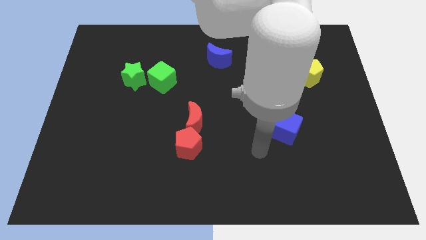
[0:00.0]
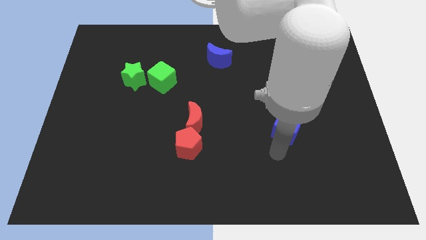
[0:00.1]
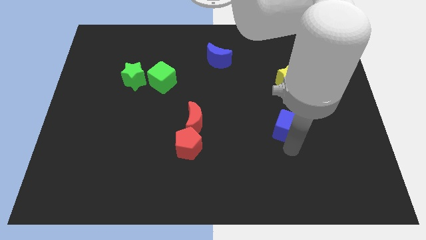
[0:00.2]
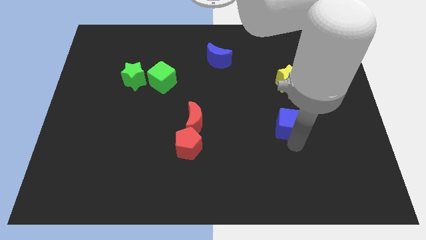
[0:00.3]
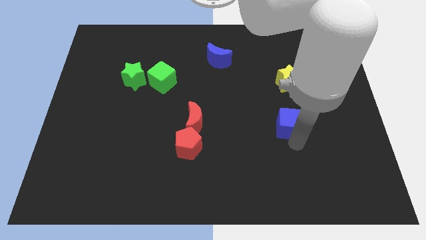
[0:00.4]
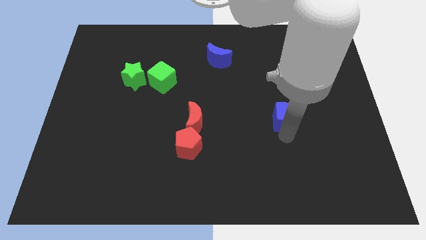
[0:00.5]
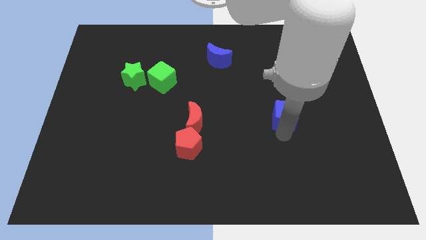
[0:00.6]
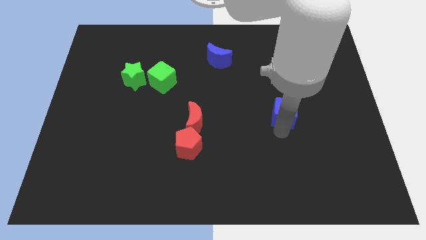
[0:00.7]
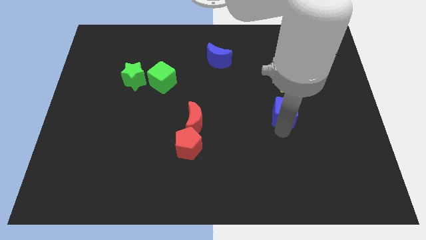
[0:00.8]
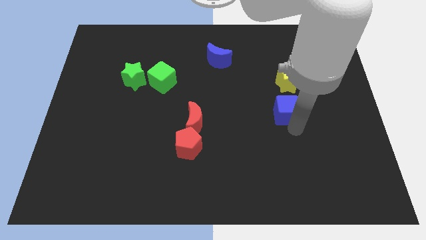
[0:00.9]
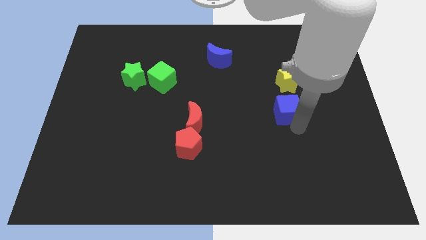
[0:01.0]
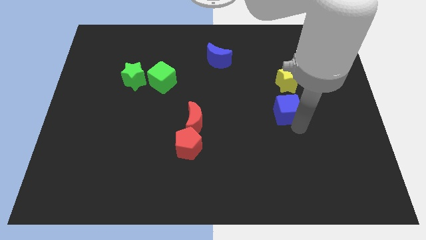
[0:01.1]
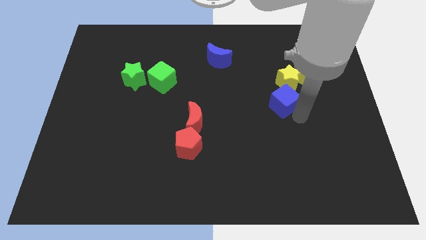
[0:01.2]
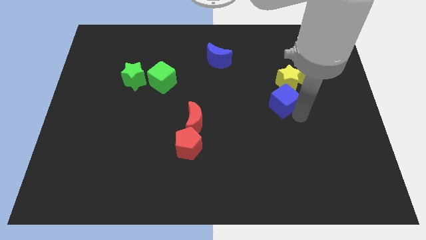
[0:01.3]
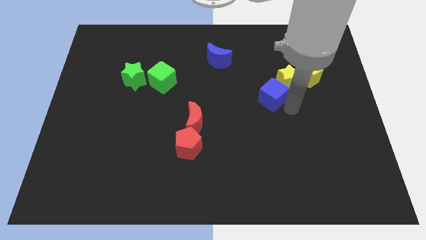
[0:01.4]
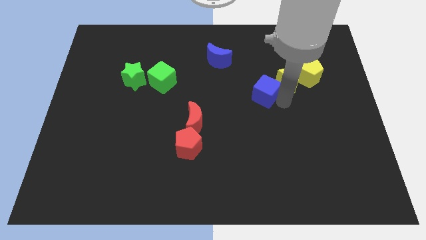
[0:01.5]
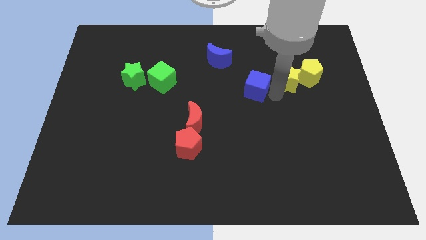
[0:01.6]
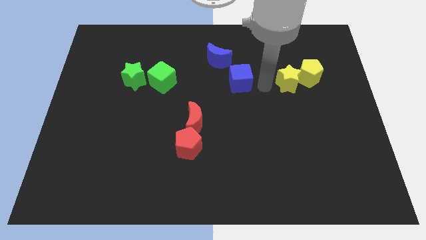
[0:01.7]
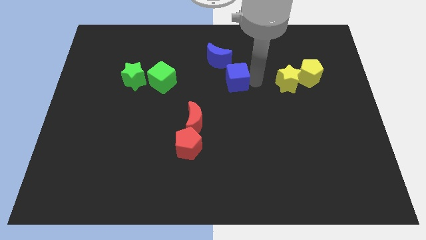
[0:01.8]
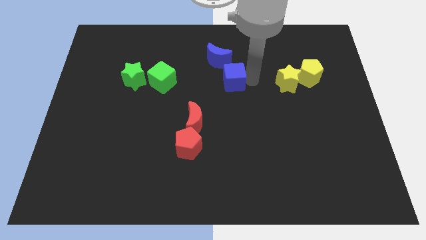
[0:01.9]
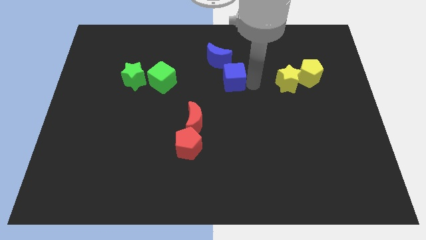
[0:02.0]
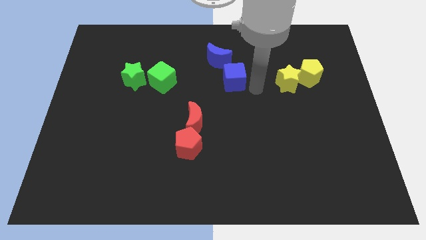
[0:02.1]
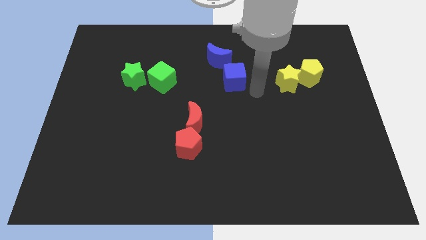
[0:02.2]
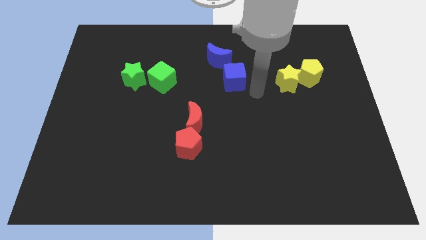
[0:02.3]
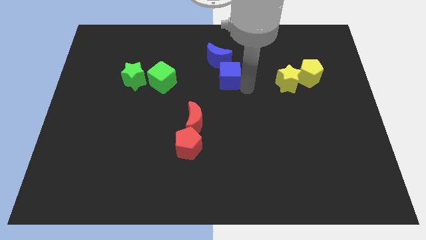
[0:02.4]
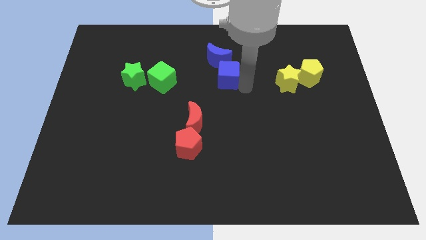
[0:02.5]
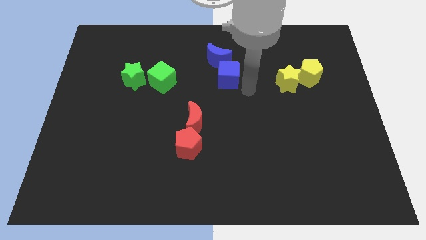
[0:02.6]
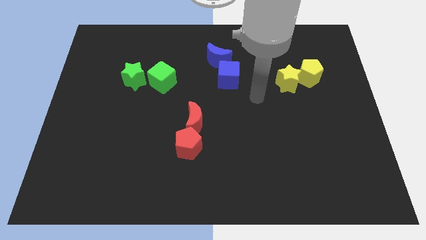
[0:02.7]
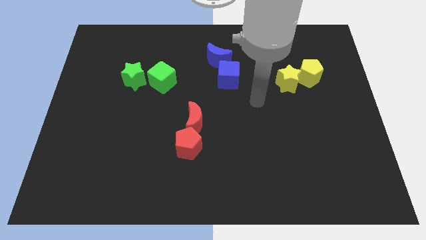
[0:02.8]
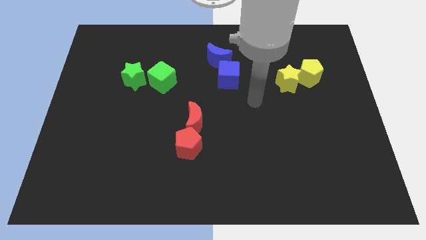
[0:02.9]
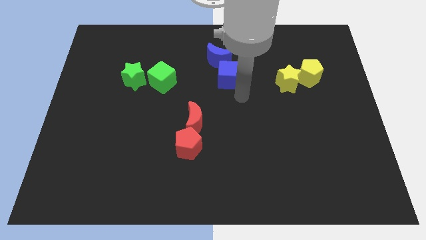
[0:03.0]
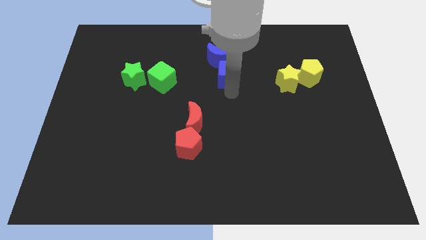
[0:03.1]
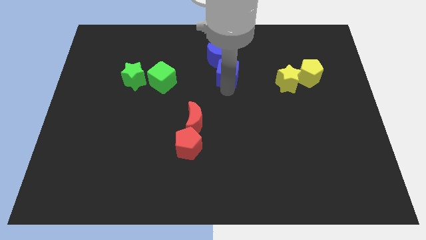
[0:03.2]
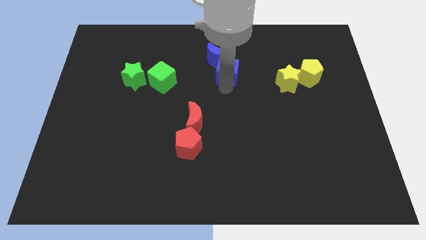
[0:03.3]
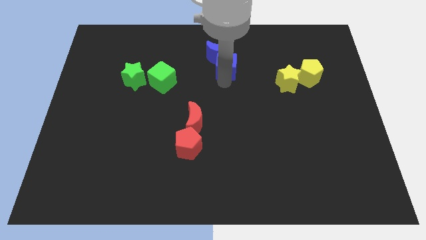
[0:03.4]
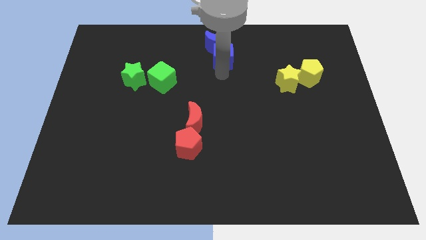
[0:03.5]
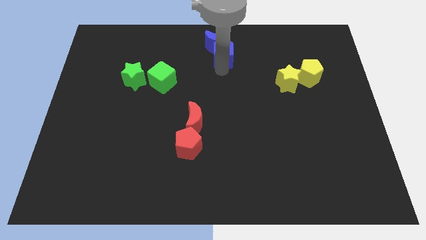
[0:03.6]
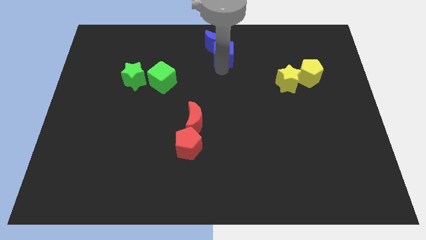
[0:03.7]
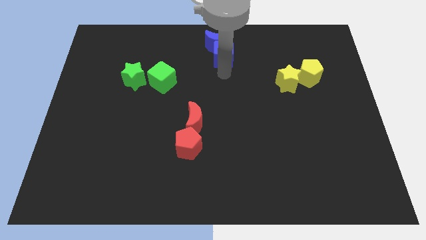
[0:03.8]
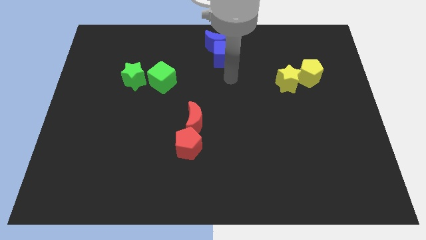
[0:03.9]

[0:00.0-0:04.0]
push the blue cube into the blue crescent

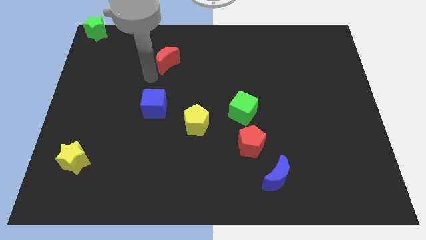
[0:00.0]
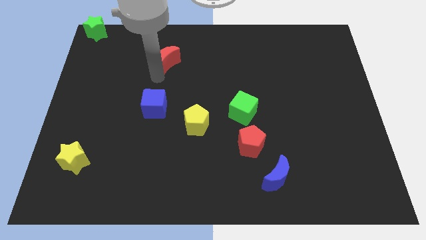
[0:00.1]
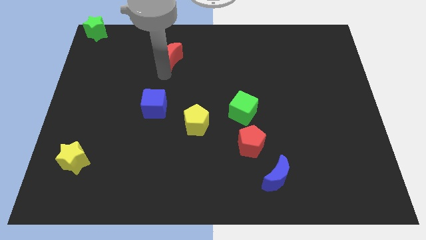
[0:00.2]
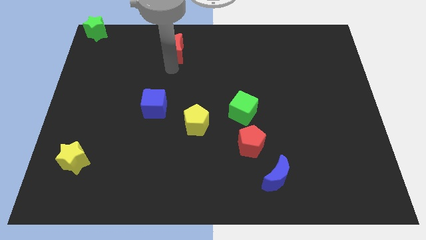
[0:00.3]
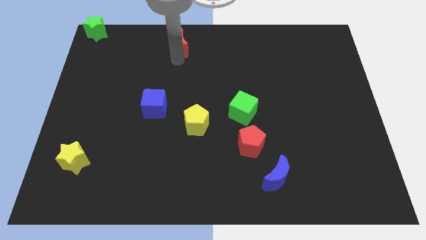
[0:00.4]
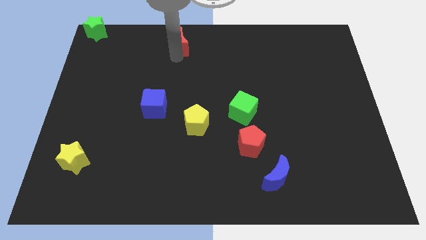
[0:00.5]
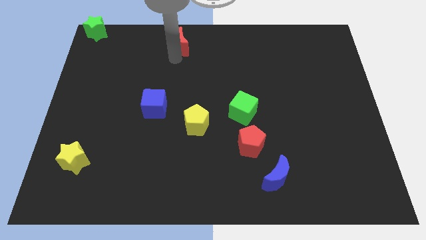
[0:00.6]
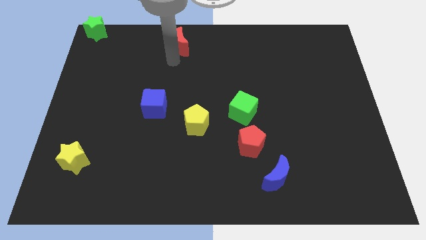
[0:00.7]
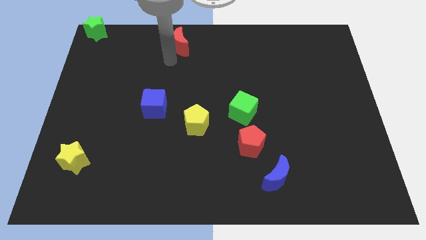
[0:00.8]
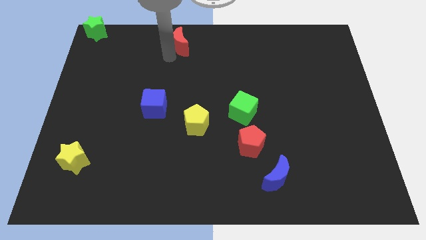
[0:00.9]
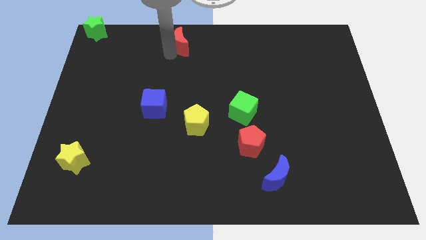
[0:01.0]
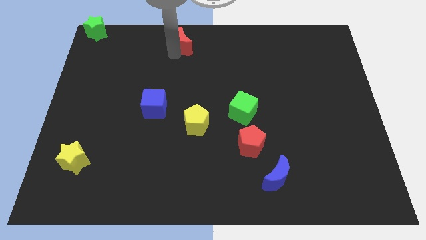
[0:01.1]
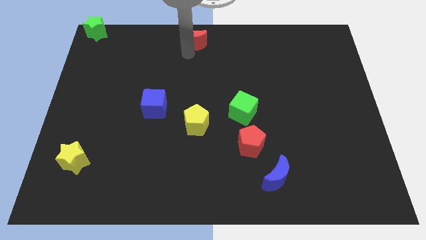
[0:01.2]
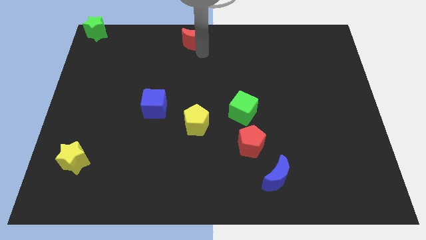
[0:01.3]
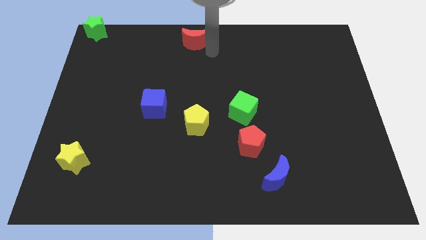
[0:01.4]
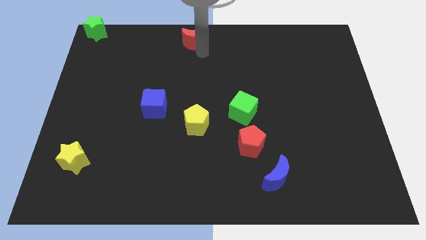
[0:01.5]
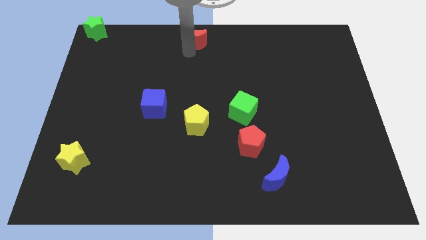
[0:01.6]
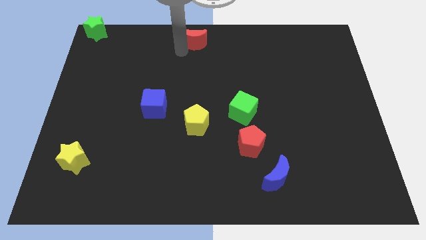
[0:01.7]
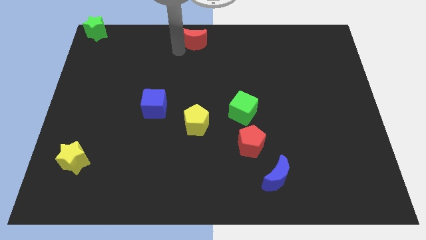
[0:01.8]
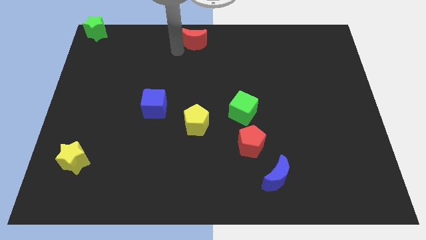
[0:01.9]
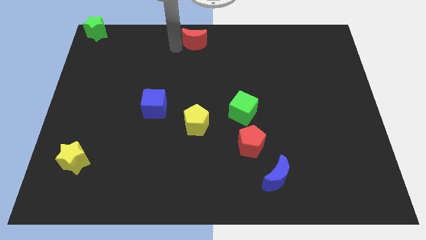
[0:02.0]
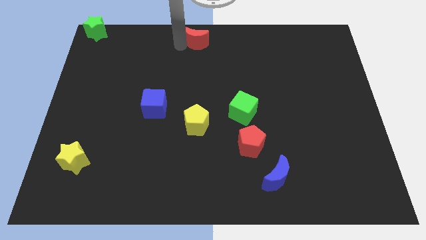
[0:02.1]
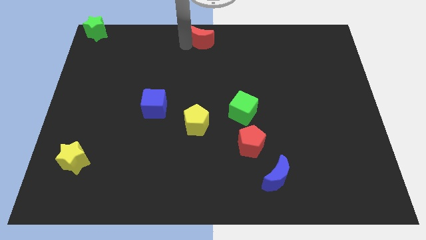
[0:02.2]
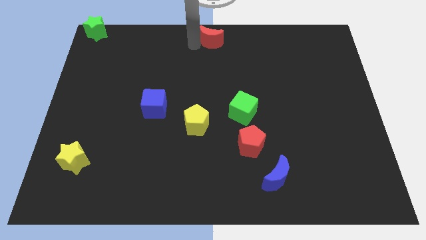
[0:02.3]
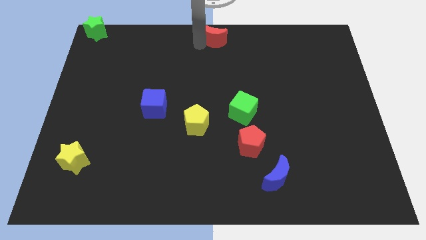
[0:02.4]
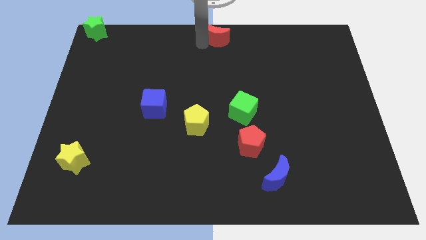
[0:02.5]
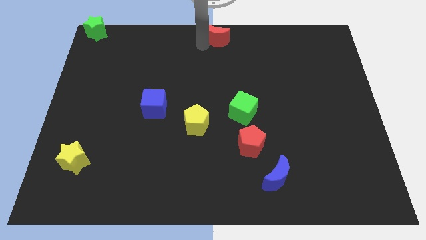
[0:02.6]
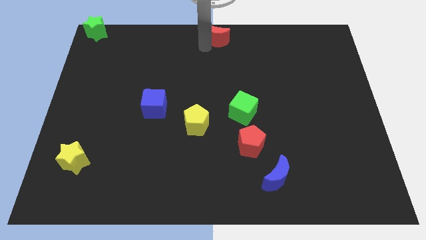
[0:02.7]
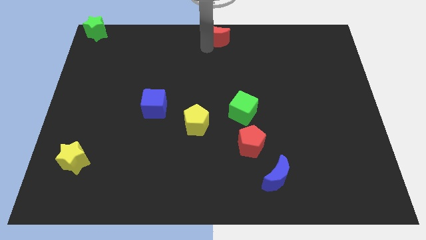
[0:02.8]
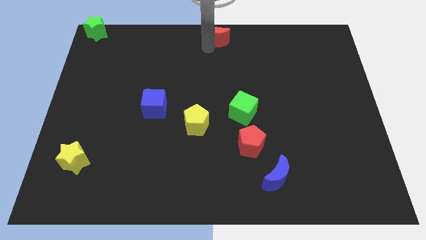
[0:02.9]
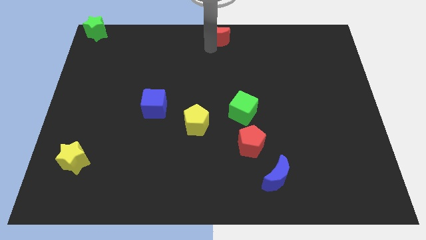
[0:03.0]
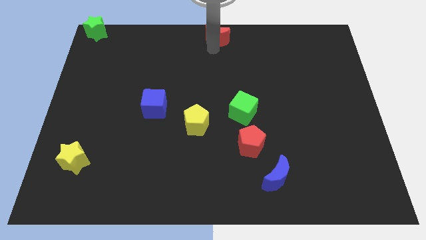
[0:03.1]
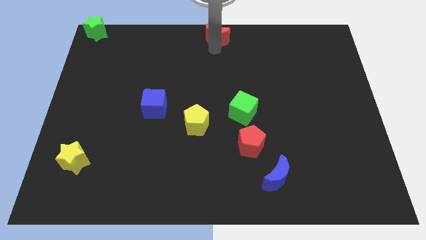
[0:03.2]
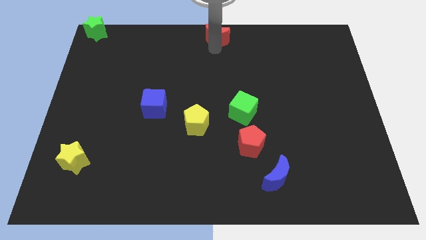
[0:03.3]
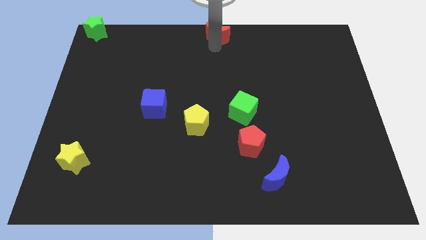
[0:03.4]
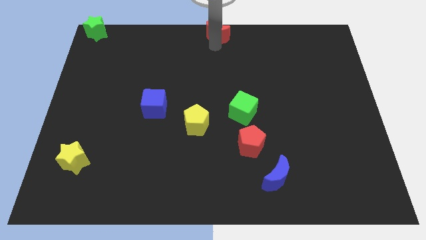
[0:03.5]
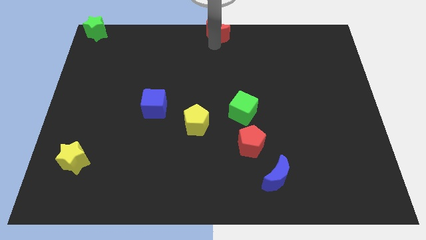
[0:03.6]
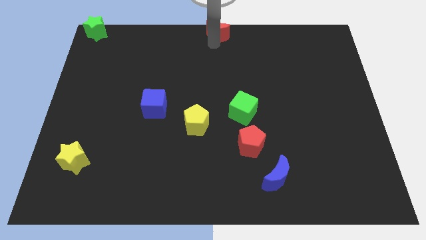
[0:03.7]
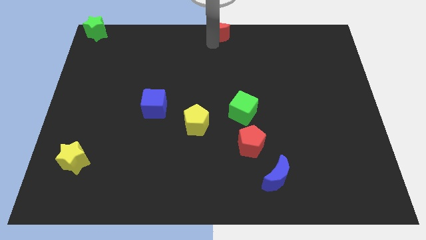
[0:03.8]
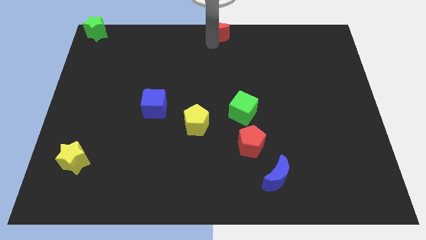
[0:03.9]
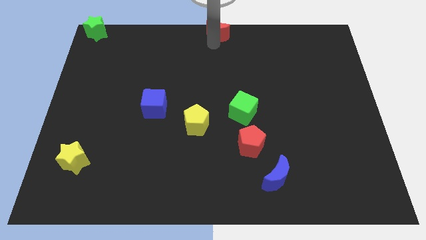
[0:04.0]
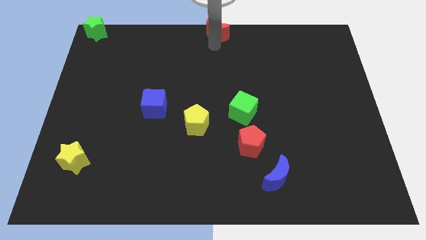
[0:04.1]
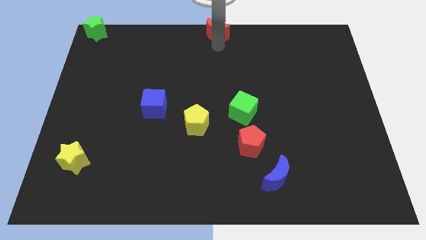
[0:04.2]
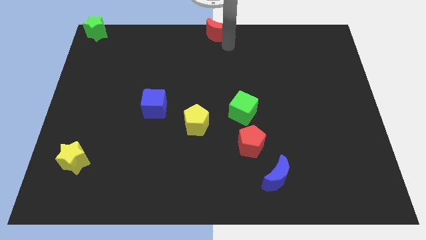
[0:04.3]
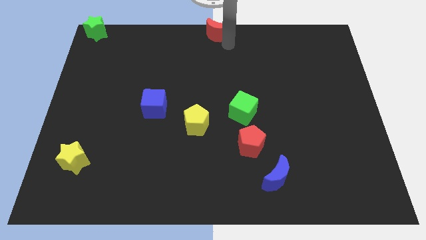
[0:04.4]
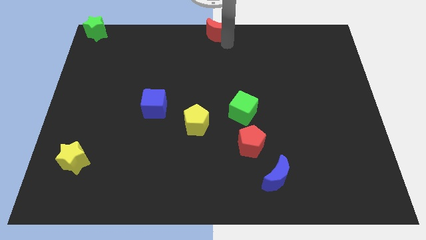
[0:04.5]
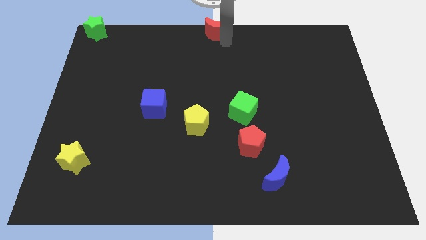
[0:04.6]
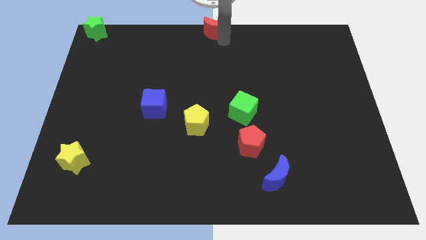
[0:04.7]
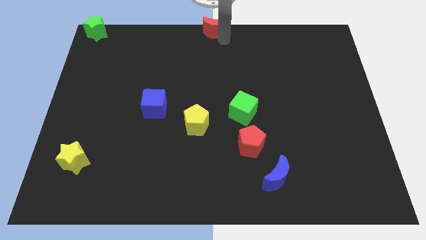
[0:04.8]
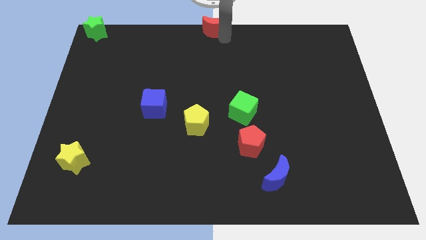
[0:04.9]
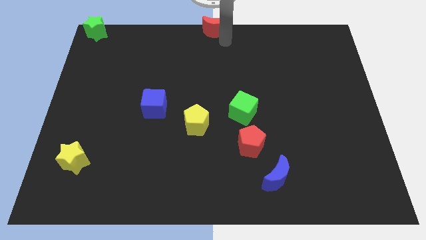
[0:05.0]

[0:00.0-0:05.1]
move the red crescent to the top center of the board
